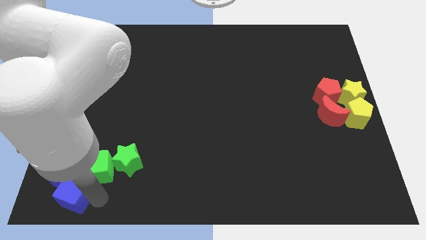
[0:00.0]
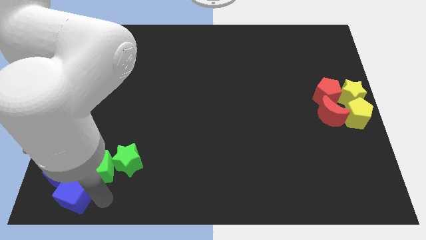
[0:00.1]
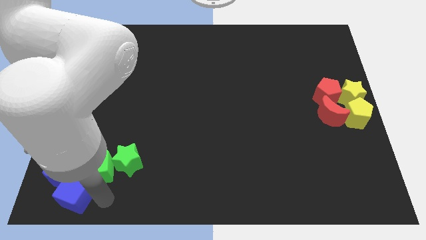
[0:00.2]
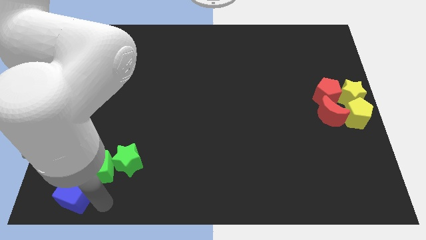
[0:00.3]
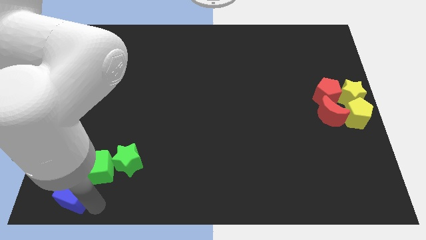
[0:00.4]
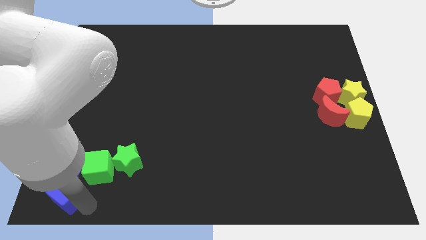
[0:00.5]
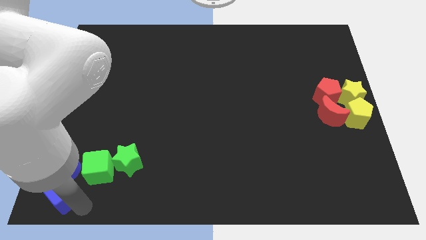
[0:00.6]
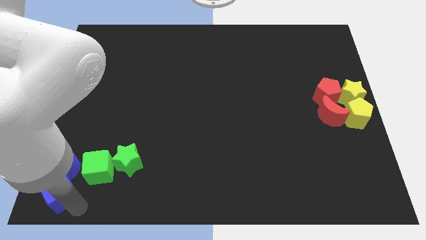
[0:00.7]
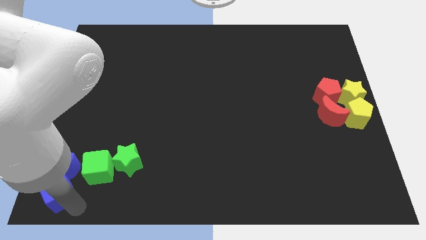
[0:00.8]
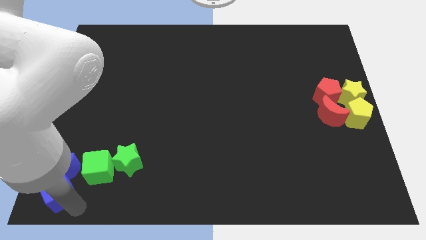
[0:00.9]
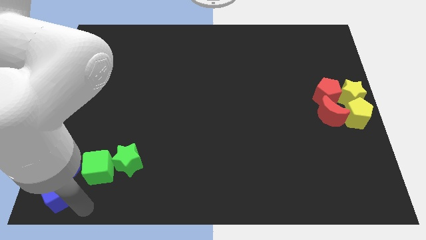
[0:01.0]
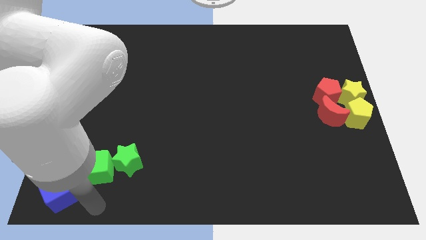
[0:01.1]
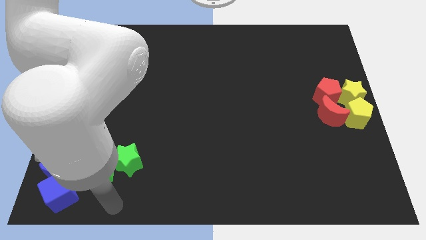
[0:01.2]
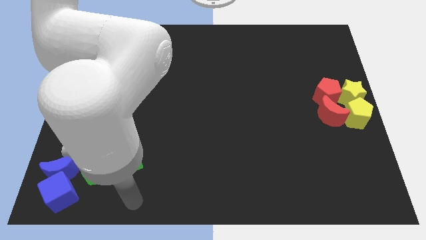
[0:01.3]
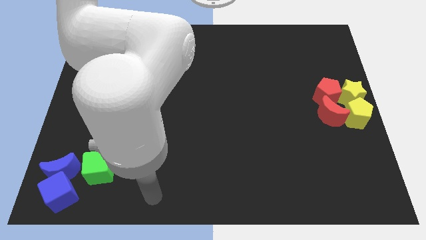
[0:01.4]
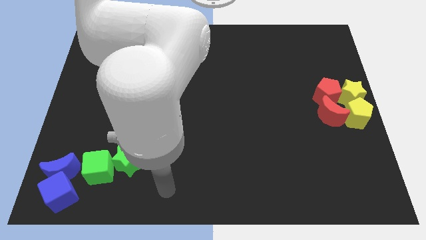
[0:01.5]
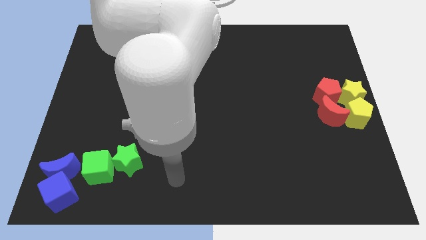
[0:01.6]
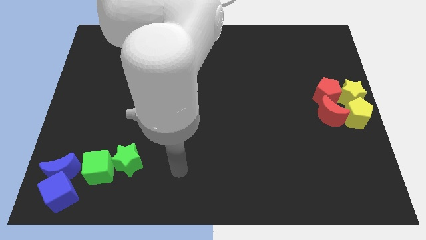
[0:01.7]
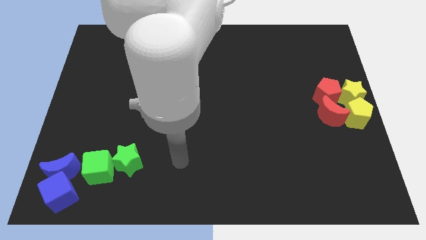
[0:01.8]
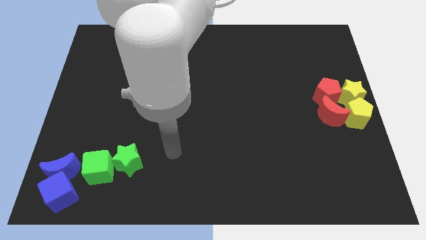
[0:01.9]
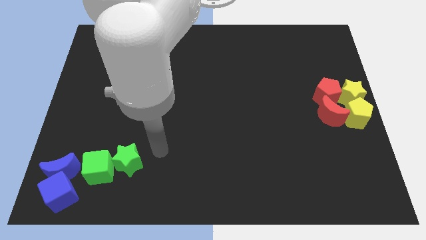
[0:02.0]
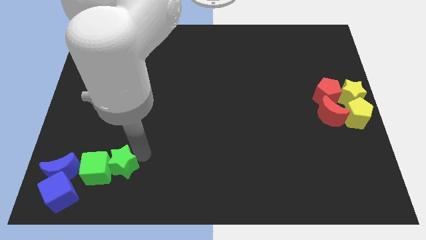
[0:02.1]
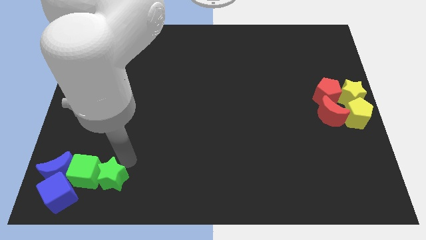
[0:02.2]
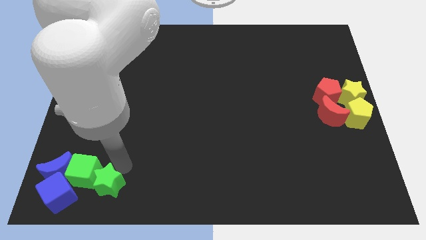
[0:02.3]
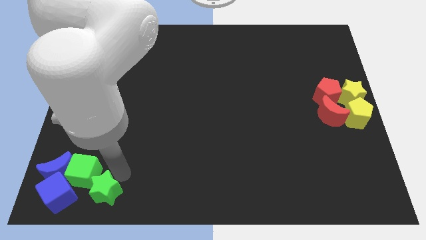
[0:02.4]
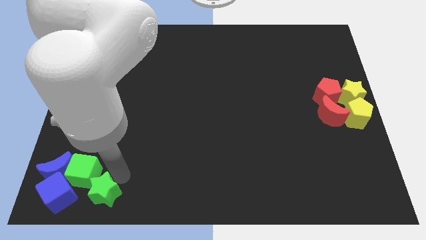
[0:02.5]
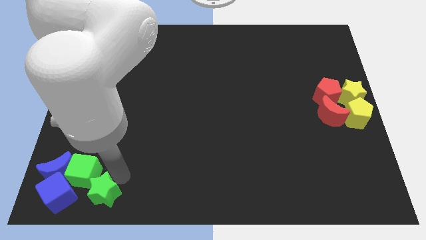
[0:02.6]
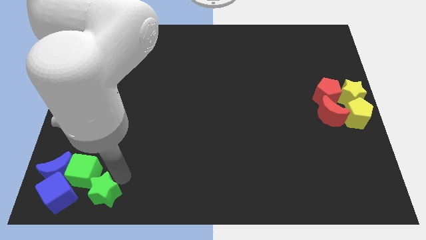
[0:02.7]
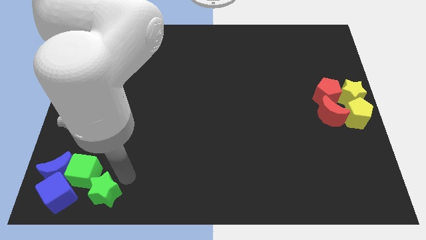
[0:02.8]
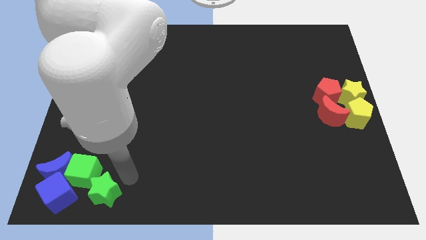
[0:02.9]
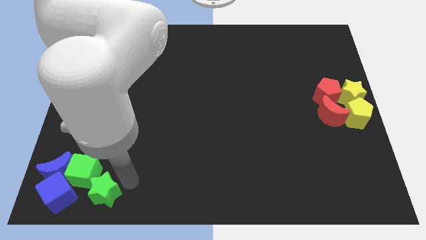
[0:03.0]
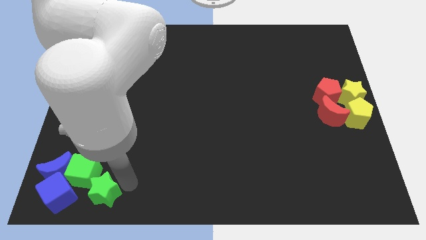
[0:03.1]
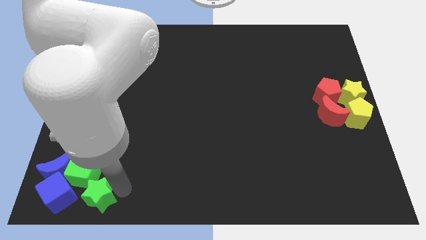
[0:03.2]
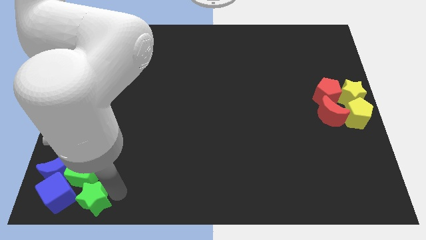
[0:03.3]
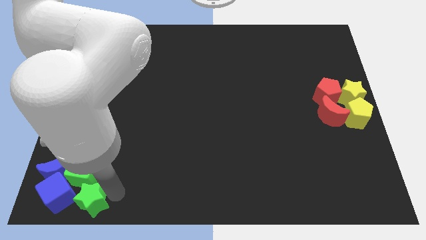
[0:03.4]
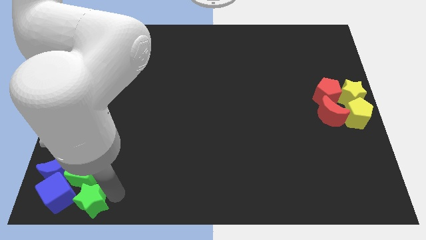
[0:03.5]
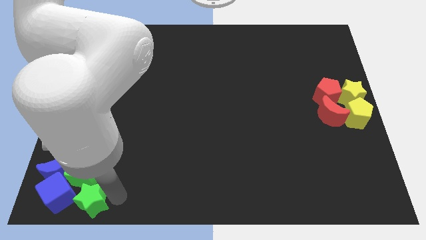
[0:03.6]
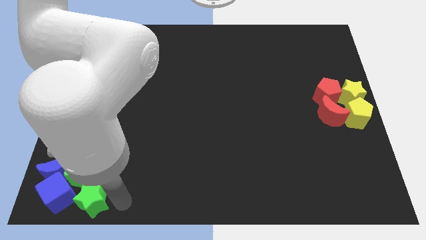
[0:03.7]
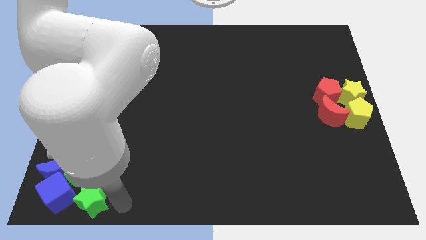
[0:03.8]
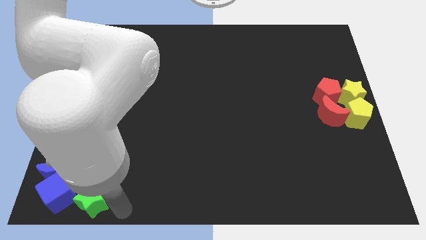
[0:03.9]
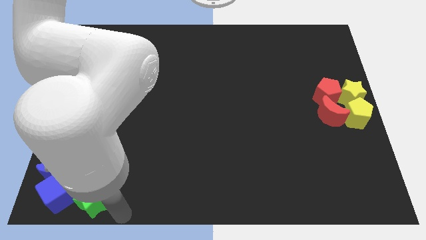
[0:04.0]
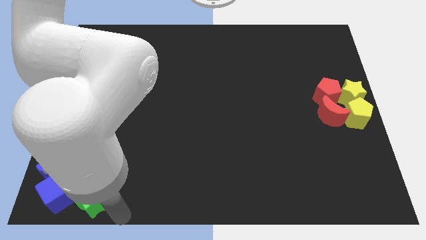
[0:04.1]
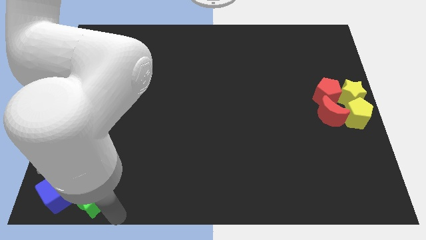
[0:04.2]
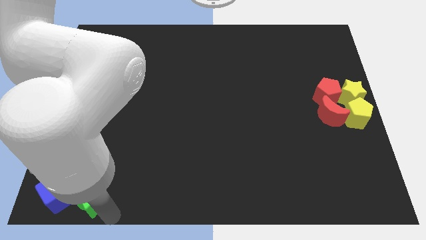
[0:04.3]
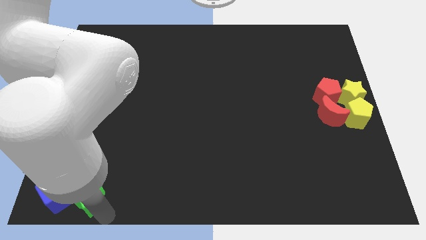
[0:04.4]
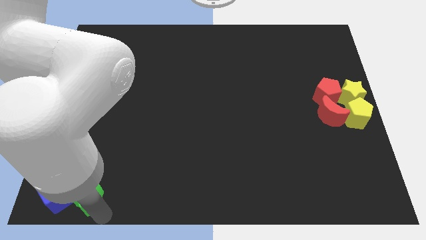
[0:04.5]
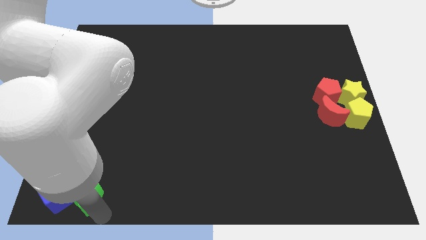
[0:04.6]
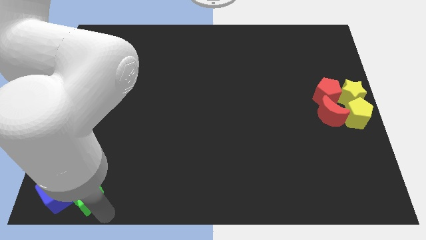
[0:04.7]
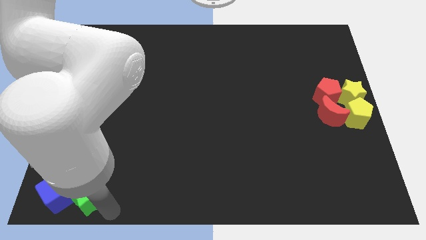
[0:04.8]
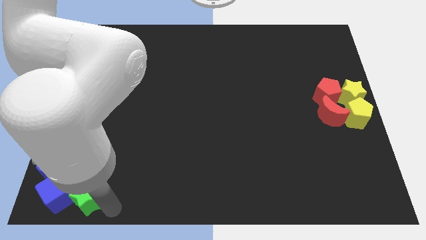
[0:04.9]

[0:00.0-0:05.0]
push the green star and blue cube to the bottom left corner

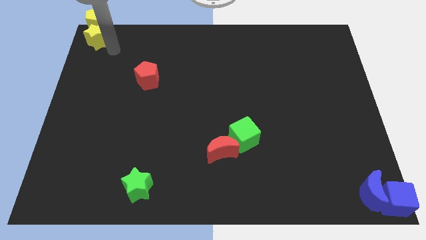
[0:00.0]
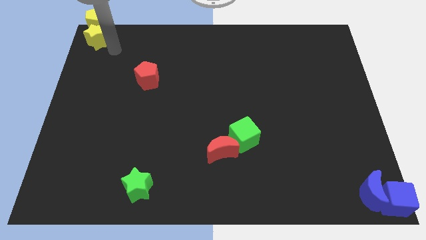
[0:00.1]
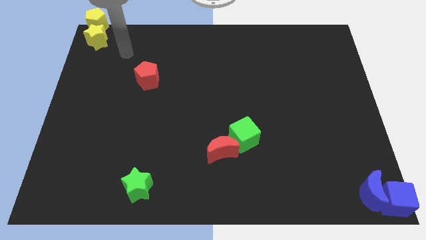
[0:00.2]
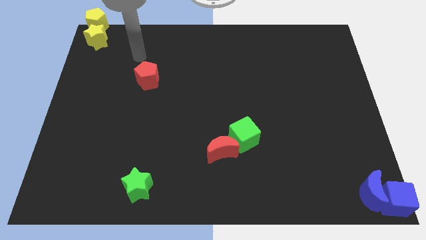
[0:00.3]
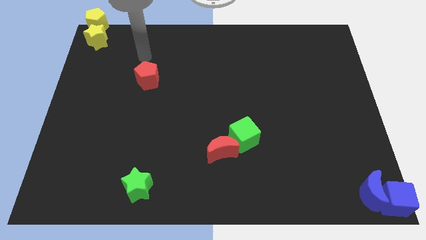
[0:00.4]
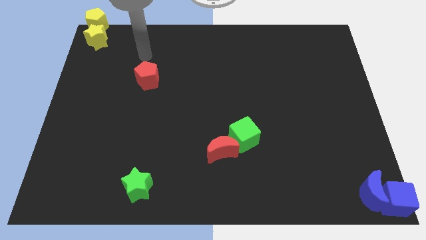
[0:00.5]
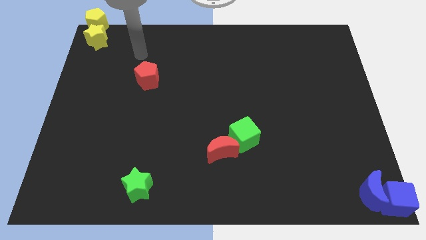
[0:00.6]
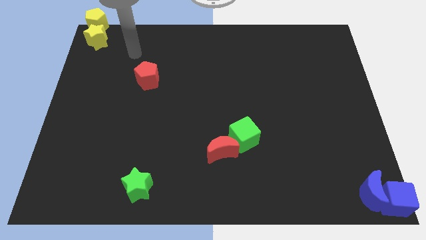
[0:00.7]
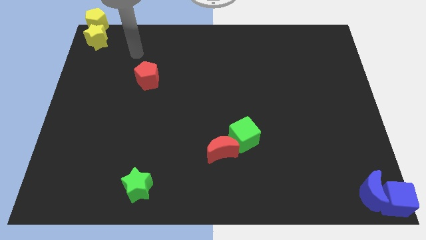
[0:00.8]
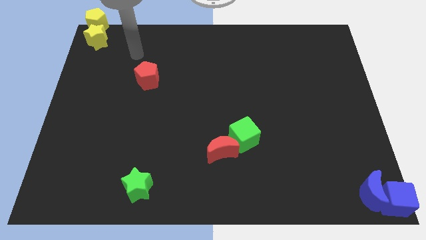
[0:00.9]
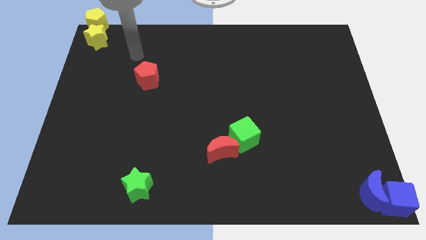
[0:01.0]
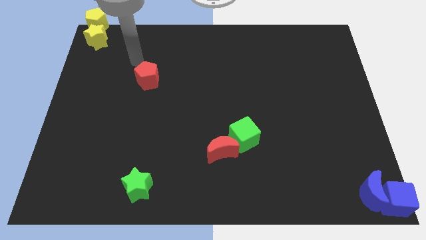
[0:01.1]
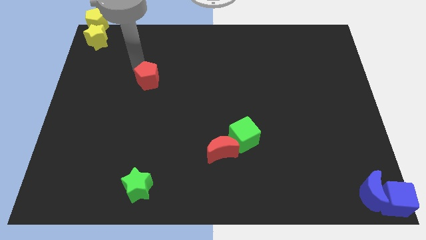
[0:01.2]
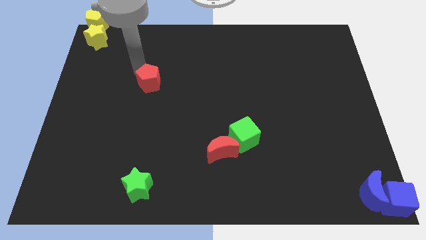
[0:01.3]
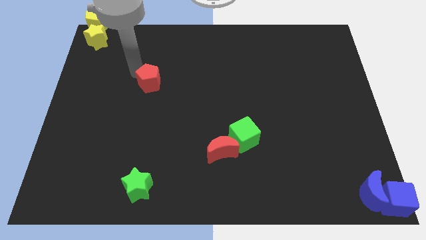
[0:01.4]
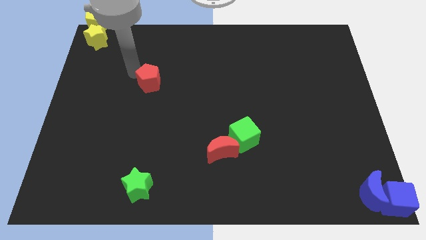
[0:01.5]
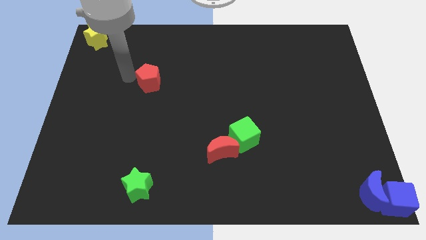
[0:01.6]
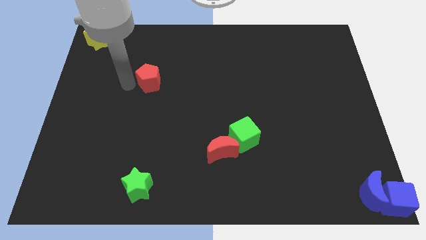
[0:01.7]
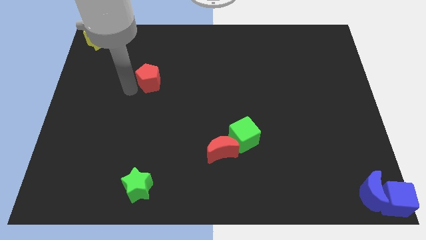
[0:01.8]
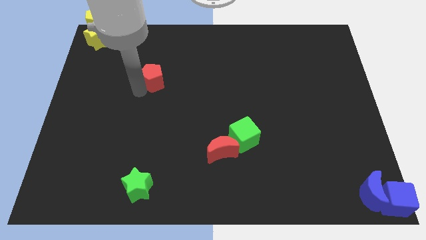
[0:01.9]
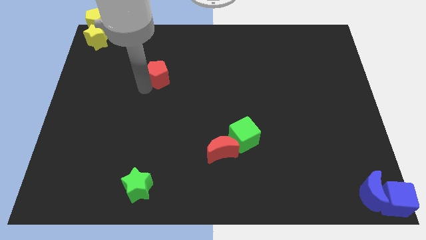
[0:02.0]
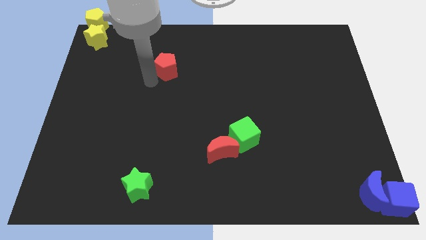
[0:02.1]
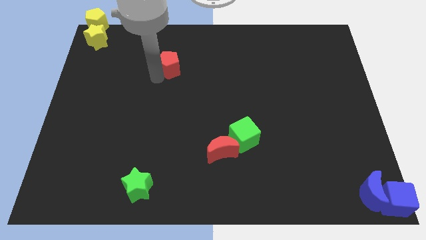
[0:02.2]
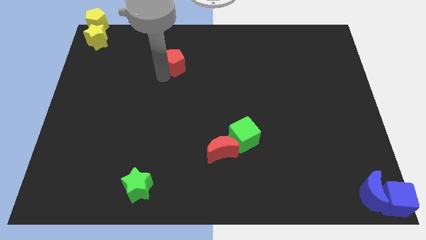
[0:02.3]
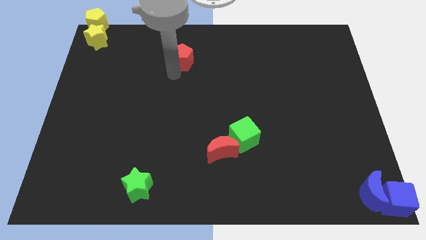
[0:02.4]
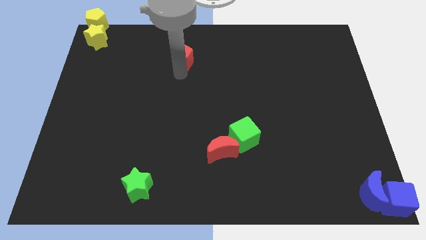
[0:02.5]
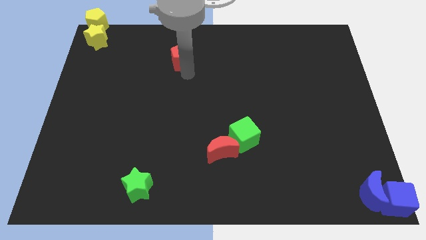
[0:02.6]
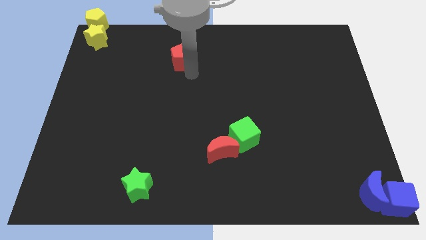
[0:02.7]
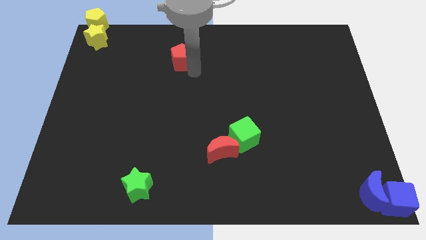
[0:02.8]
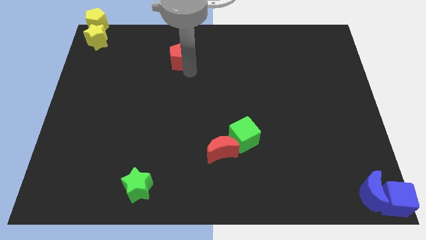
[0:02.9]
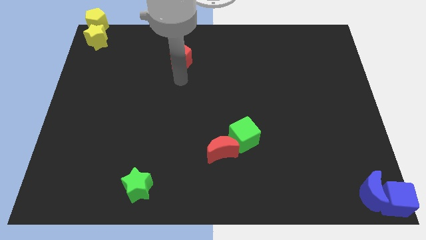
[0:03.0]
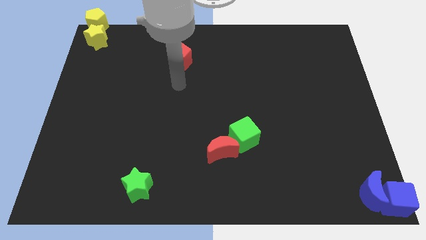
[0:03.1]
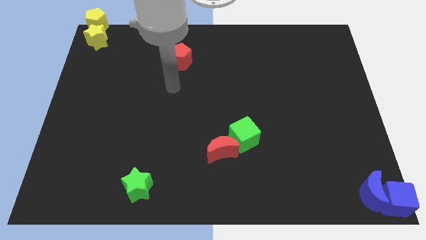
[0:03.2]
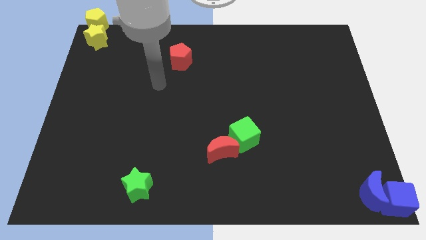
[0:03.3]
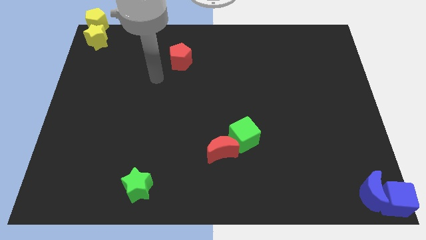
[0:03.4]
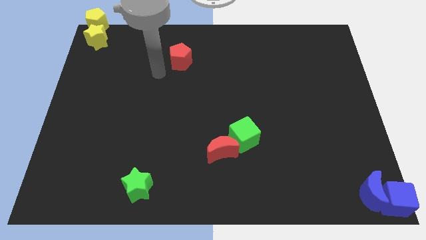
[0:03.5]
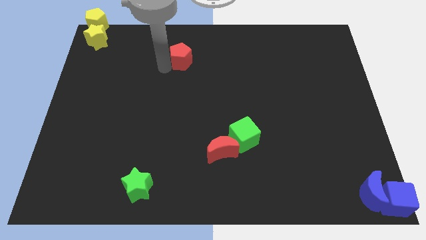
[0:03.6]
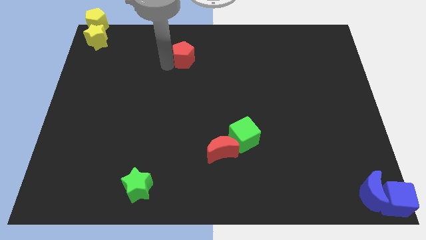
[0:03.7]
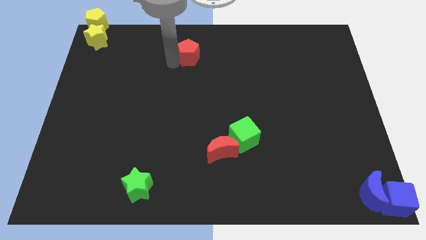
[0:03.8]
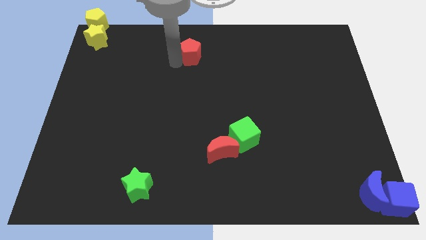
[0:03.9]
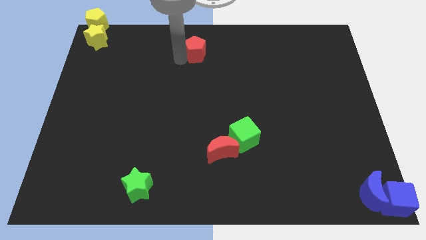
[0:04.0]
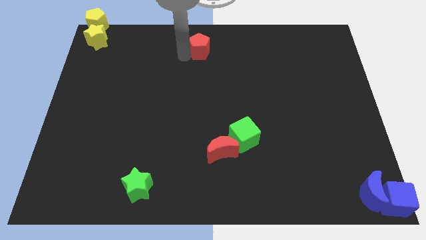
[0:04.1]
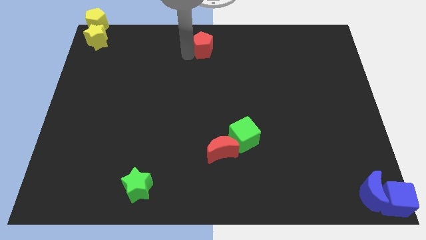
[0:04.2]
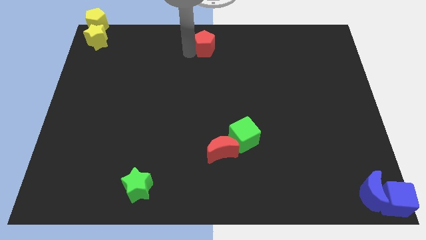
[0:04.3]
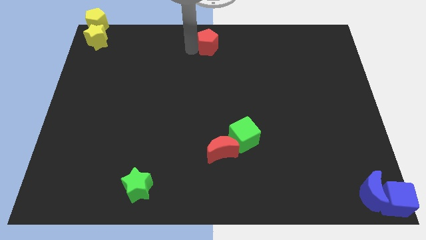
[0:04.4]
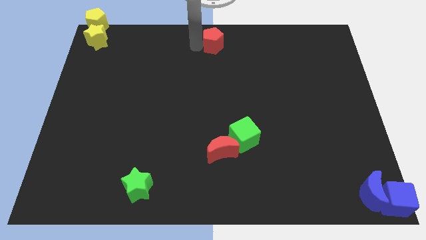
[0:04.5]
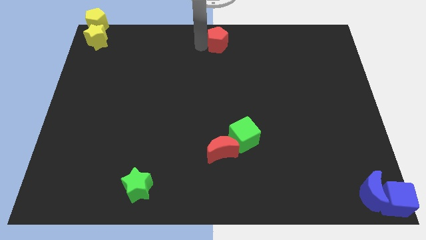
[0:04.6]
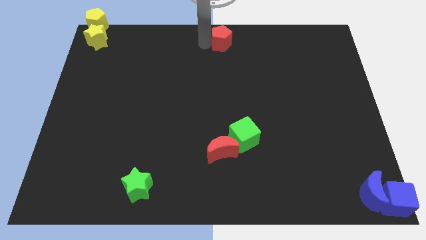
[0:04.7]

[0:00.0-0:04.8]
push the red pentagon to the top center of the board
